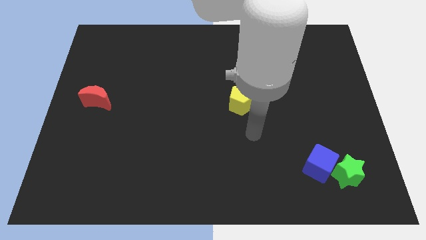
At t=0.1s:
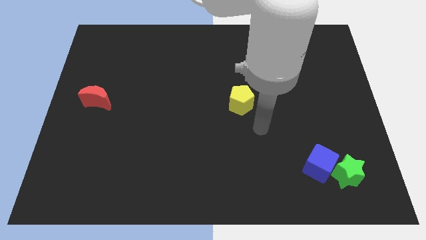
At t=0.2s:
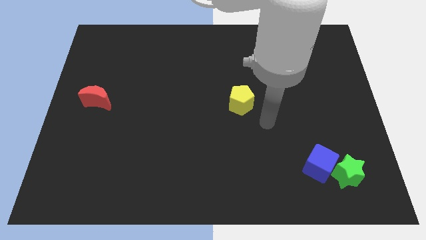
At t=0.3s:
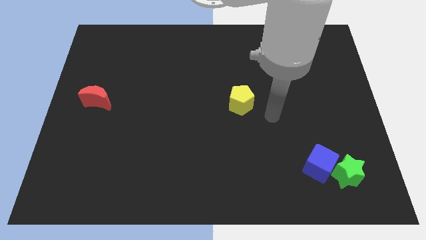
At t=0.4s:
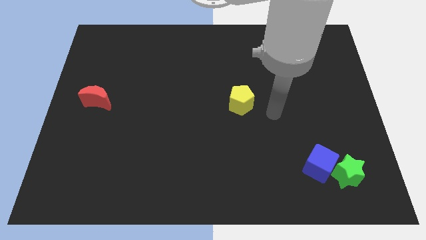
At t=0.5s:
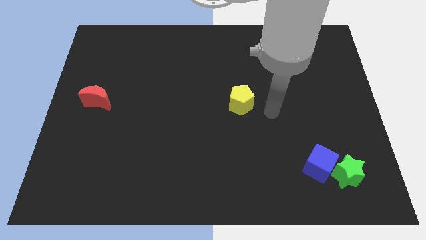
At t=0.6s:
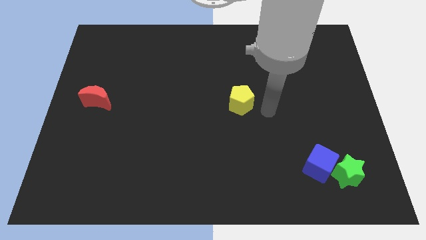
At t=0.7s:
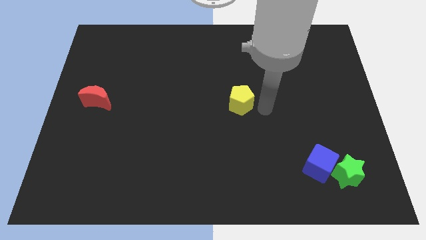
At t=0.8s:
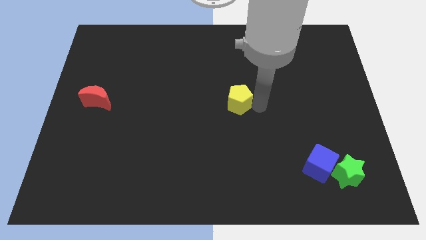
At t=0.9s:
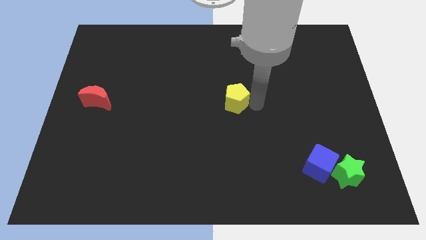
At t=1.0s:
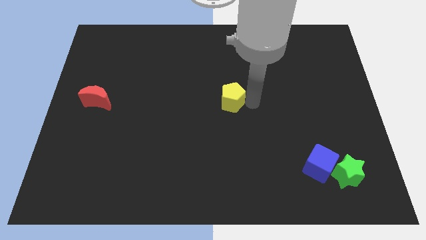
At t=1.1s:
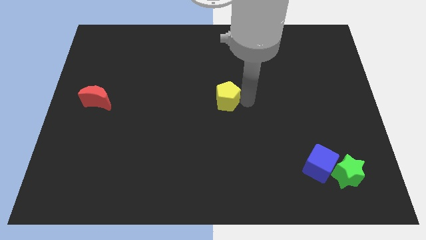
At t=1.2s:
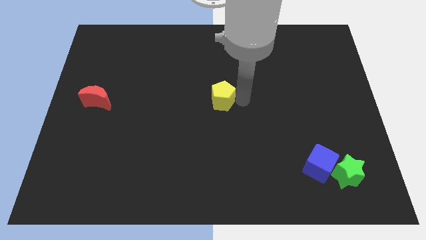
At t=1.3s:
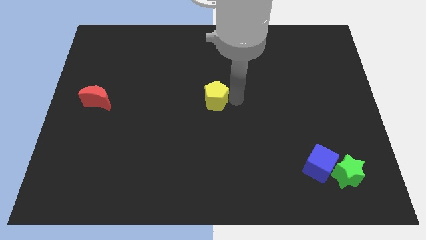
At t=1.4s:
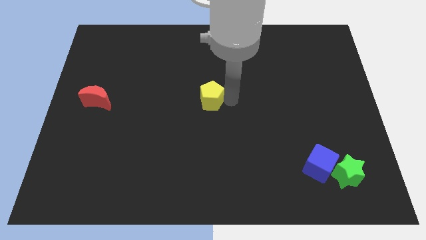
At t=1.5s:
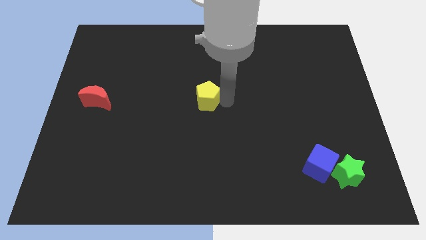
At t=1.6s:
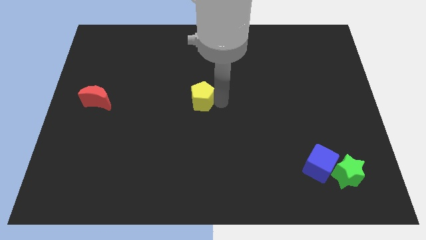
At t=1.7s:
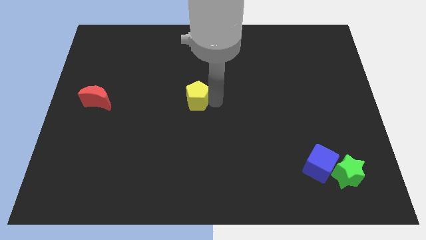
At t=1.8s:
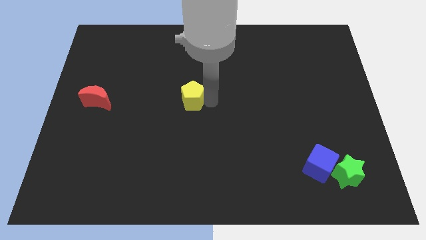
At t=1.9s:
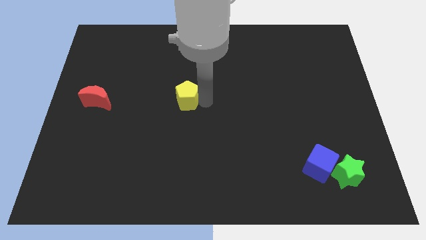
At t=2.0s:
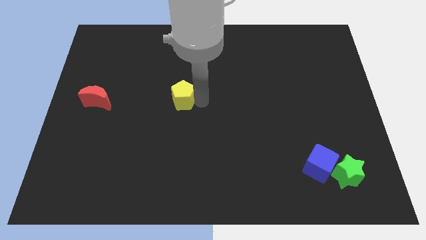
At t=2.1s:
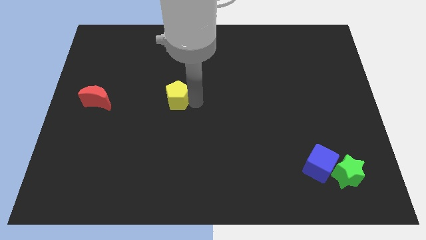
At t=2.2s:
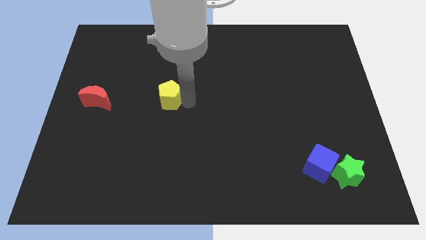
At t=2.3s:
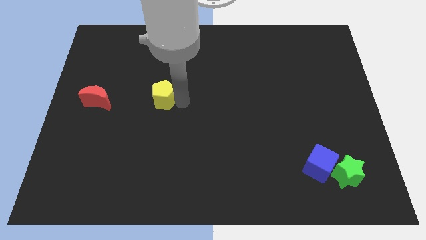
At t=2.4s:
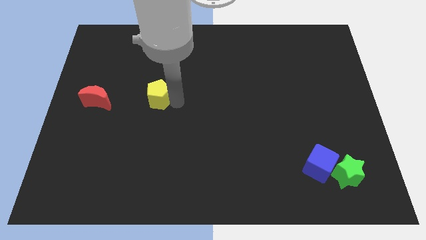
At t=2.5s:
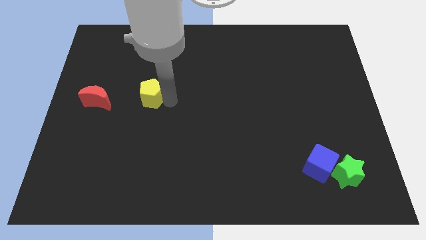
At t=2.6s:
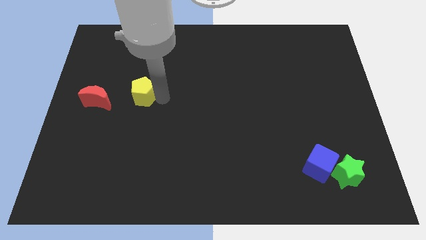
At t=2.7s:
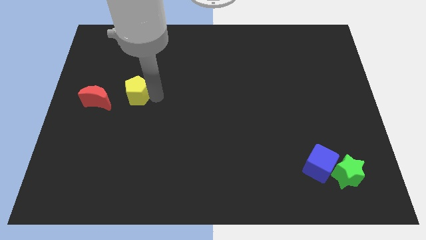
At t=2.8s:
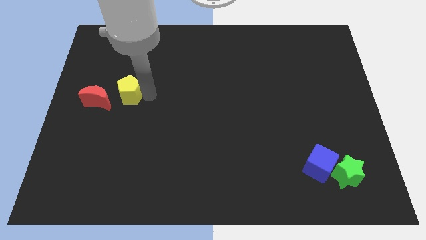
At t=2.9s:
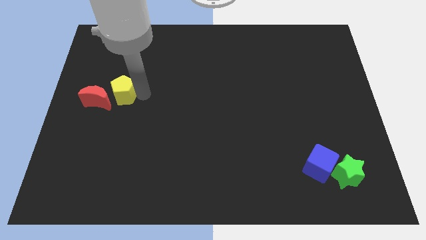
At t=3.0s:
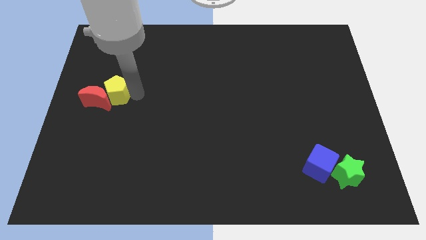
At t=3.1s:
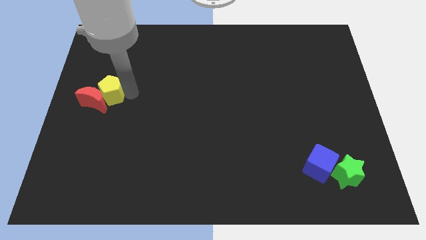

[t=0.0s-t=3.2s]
move the yellow block to the moon

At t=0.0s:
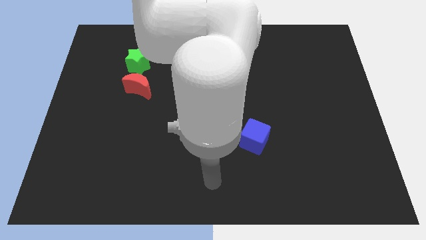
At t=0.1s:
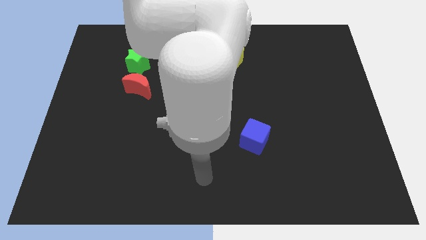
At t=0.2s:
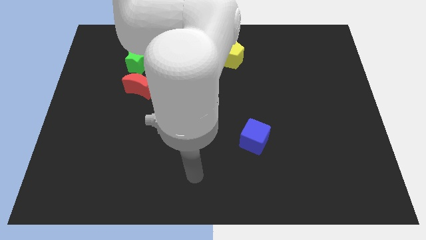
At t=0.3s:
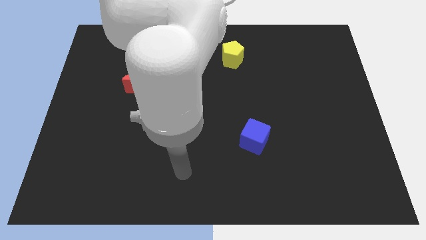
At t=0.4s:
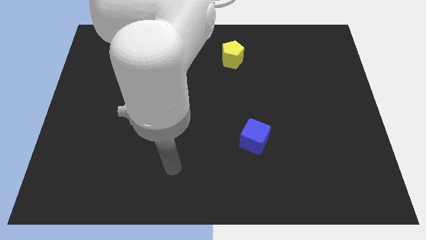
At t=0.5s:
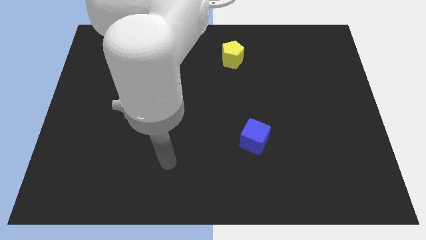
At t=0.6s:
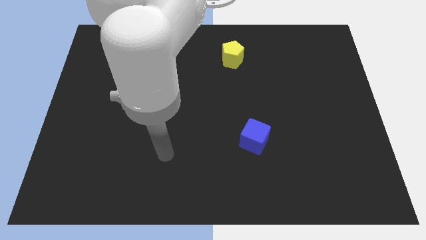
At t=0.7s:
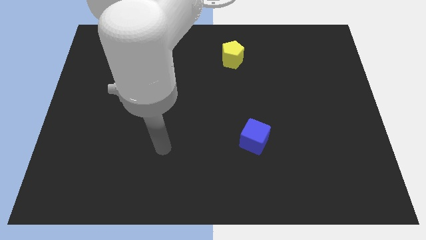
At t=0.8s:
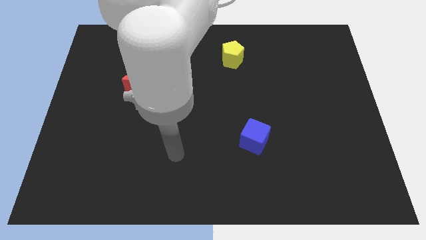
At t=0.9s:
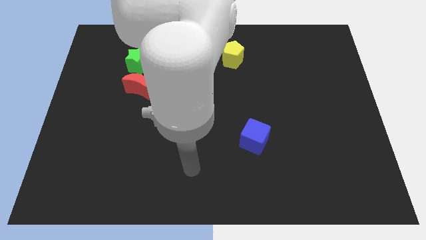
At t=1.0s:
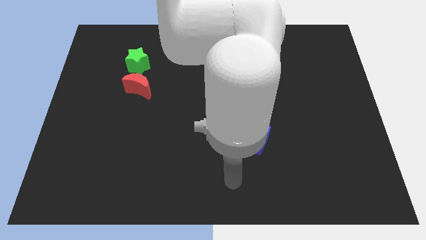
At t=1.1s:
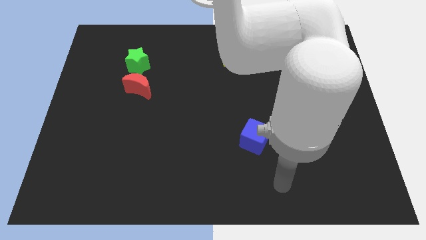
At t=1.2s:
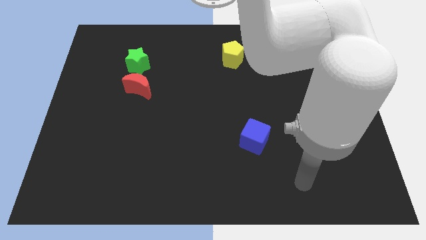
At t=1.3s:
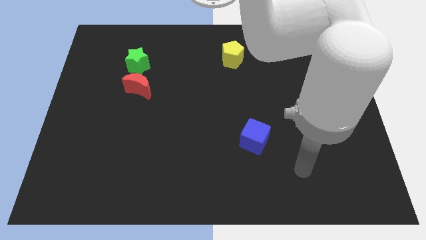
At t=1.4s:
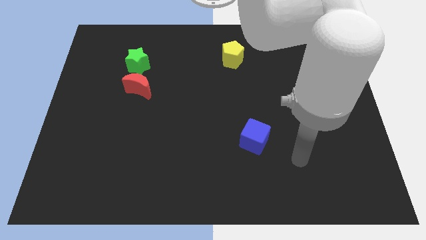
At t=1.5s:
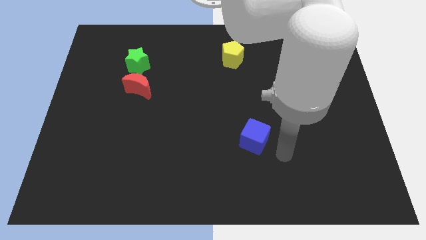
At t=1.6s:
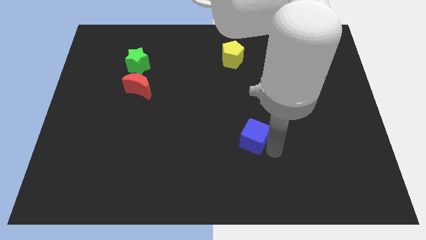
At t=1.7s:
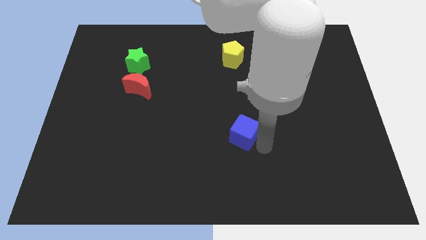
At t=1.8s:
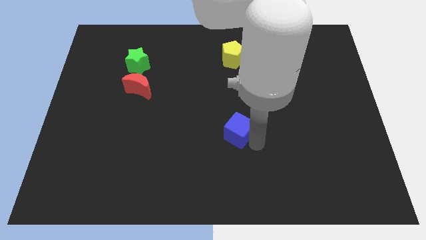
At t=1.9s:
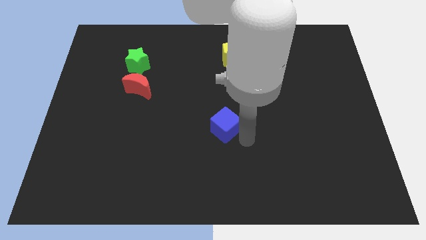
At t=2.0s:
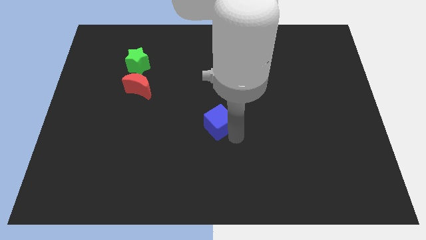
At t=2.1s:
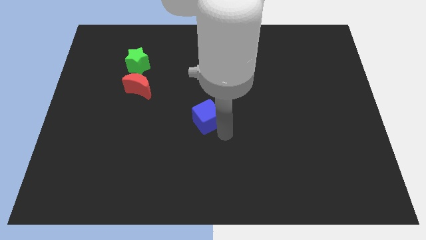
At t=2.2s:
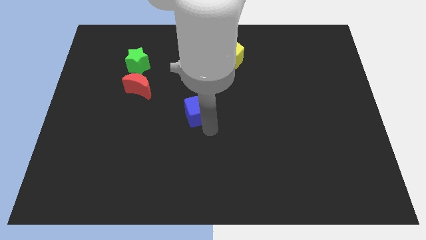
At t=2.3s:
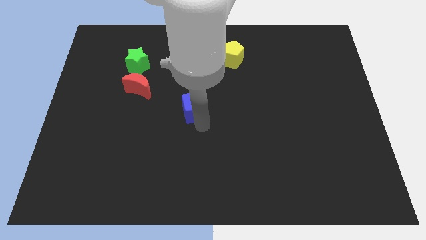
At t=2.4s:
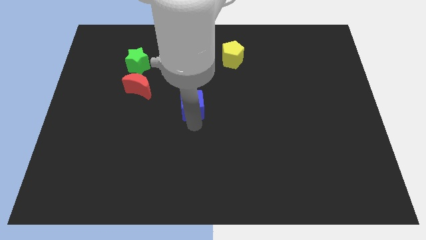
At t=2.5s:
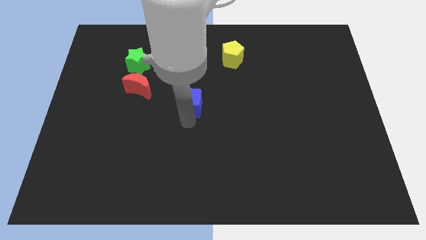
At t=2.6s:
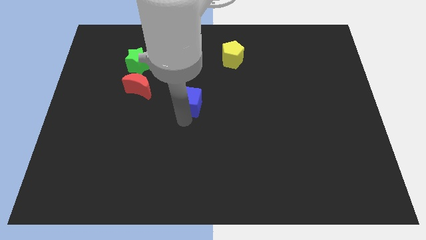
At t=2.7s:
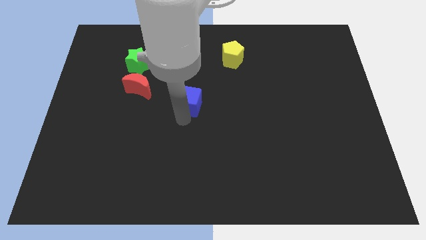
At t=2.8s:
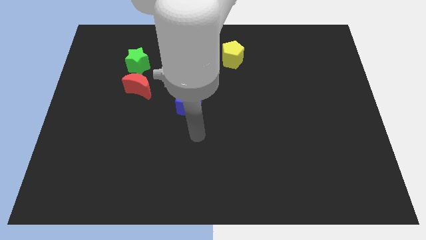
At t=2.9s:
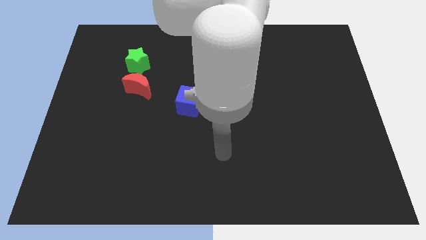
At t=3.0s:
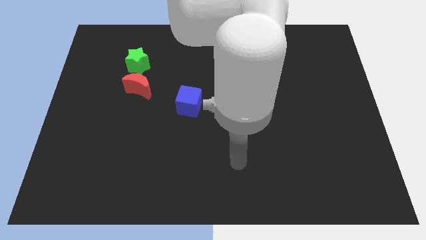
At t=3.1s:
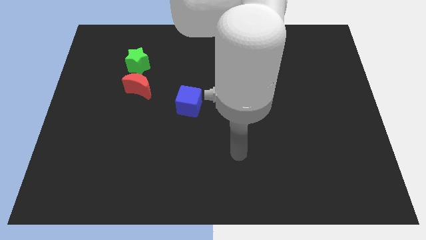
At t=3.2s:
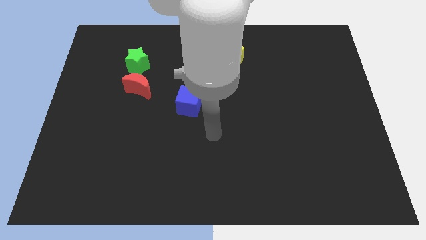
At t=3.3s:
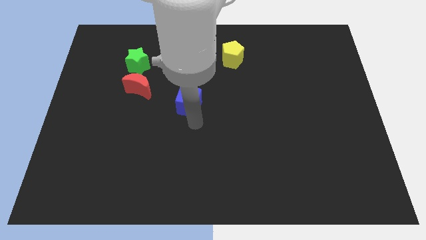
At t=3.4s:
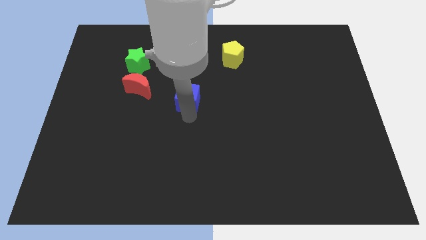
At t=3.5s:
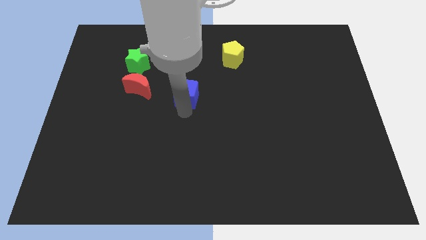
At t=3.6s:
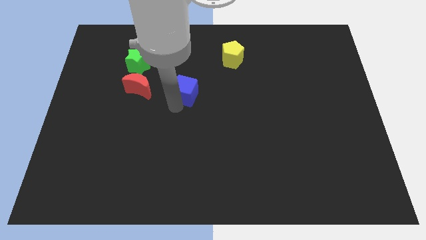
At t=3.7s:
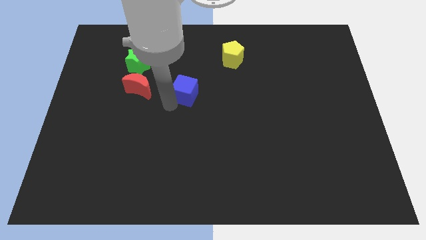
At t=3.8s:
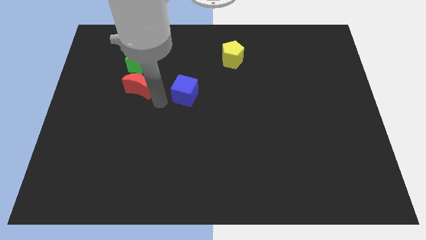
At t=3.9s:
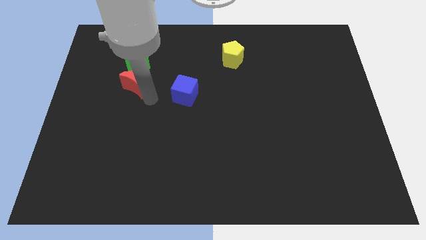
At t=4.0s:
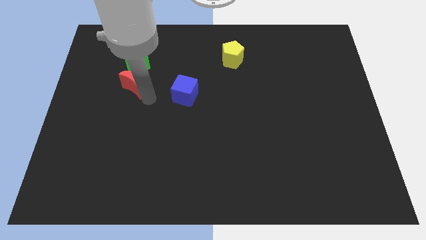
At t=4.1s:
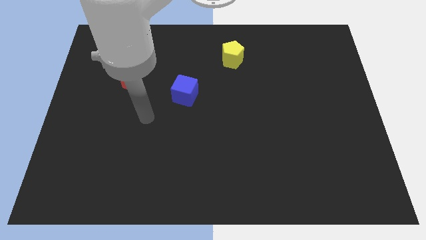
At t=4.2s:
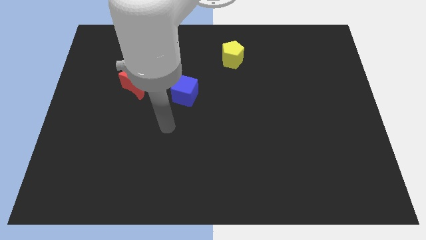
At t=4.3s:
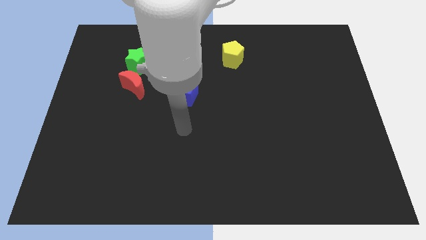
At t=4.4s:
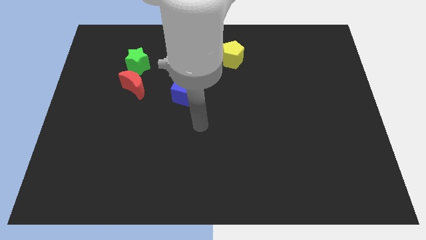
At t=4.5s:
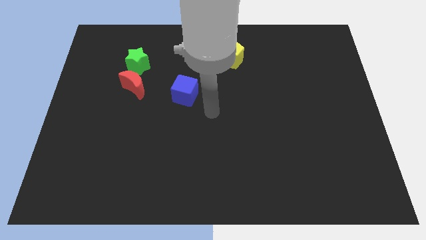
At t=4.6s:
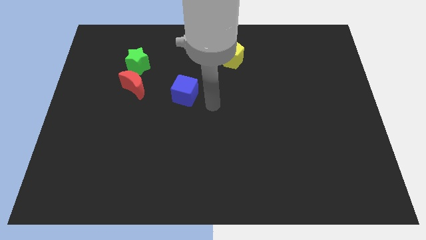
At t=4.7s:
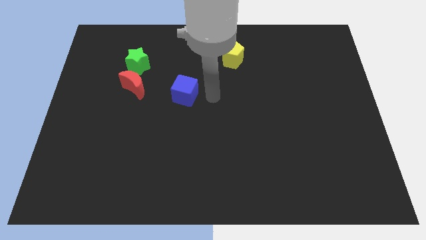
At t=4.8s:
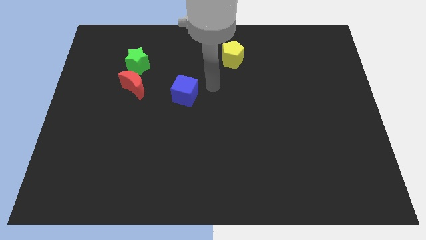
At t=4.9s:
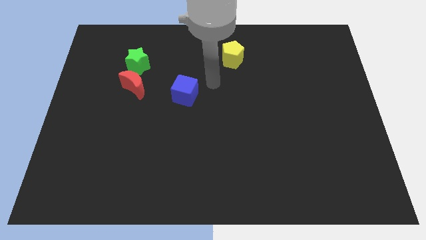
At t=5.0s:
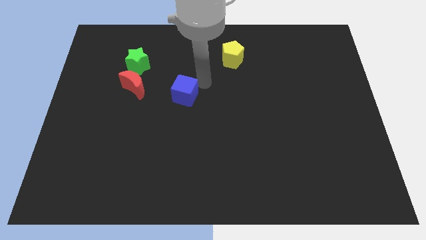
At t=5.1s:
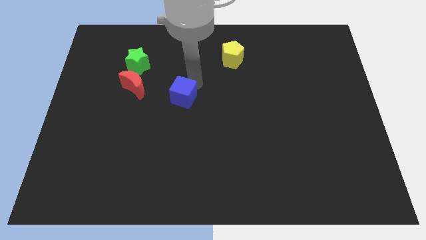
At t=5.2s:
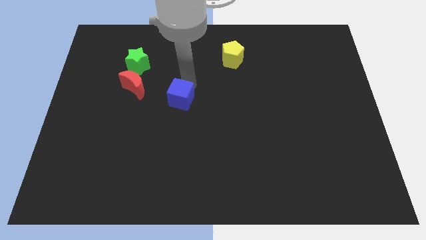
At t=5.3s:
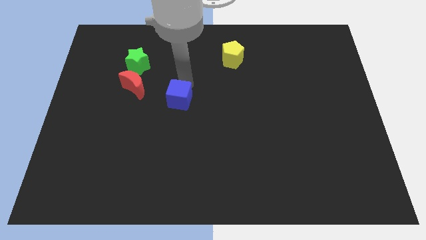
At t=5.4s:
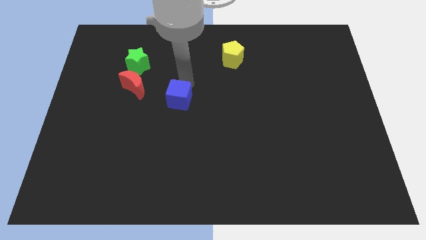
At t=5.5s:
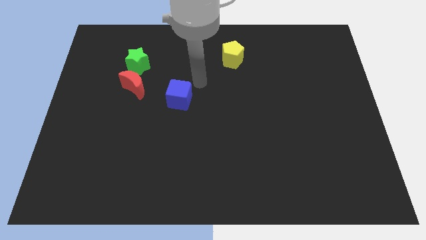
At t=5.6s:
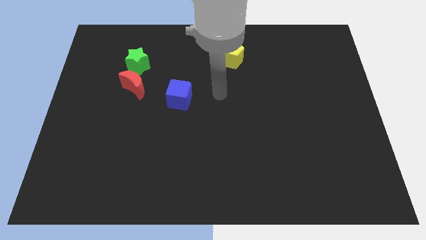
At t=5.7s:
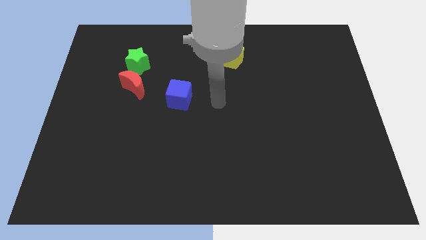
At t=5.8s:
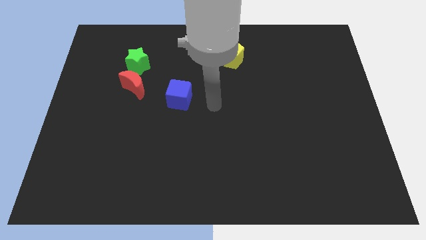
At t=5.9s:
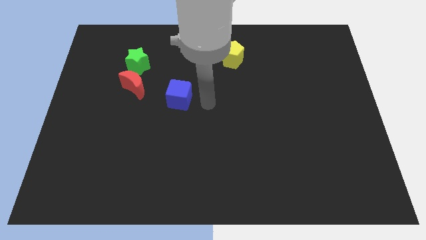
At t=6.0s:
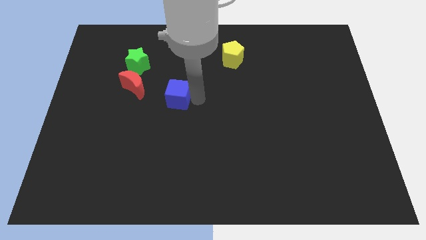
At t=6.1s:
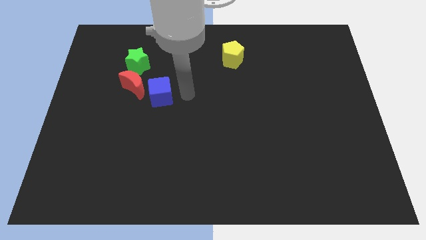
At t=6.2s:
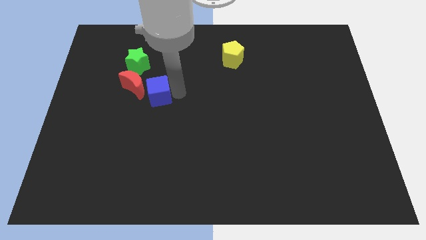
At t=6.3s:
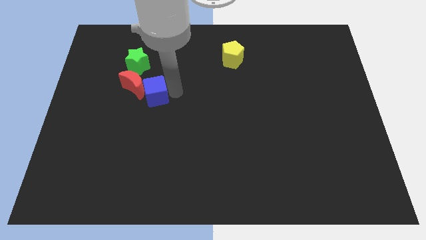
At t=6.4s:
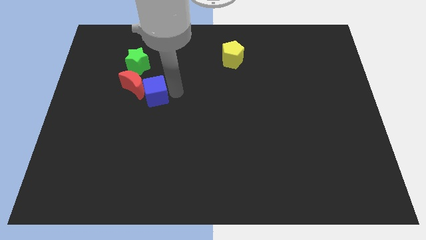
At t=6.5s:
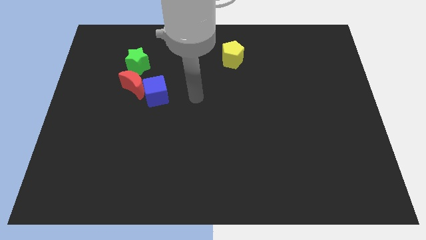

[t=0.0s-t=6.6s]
push the blue block close to the red moon
